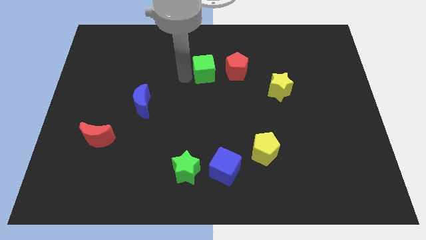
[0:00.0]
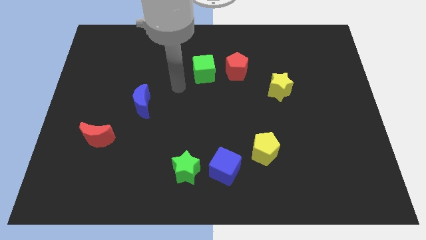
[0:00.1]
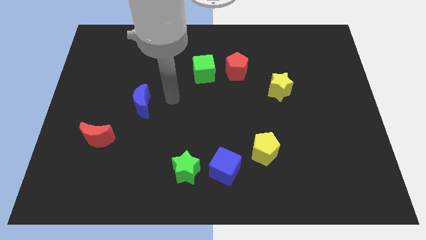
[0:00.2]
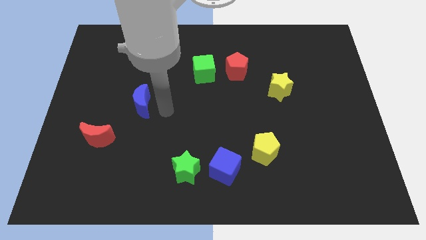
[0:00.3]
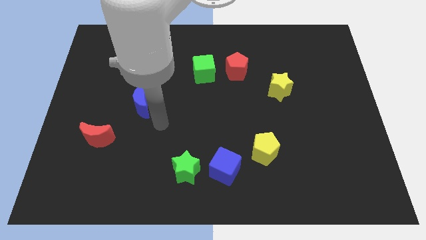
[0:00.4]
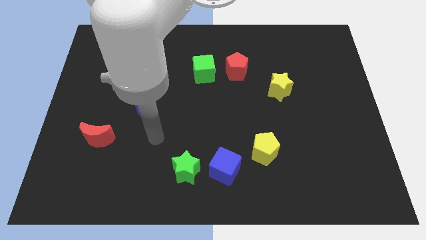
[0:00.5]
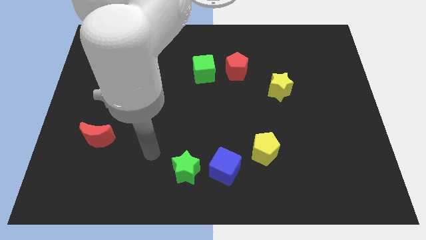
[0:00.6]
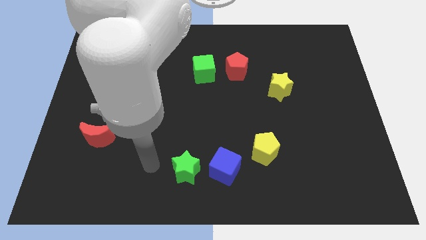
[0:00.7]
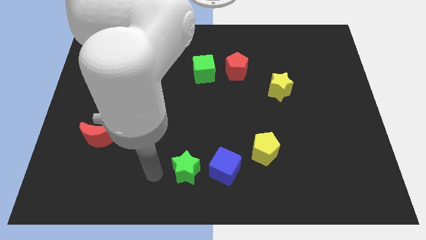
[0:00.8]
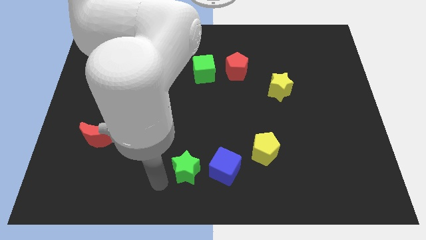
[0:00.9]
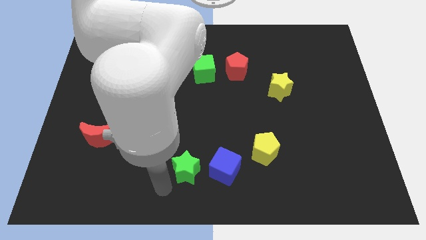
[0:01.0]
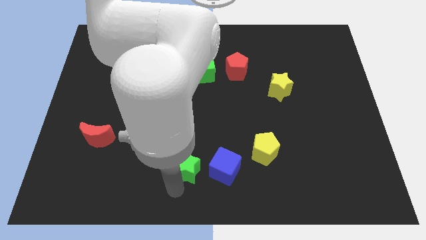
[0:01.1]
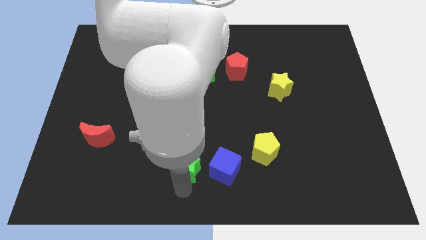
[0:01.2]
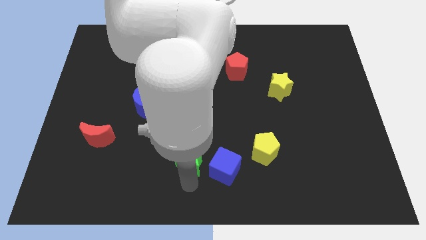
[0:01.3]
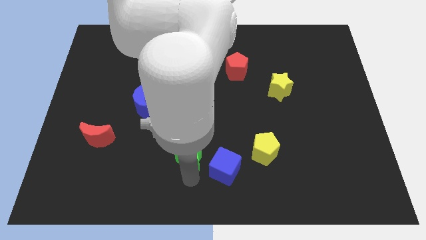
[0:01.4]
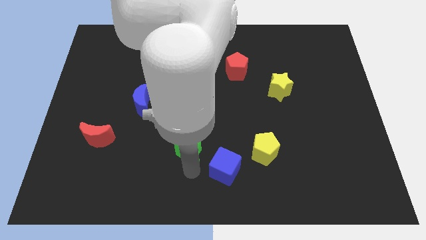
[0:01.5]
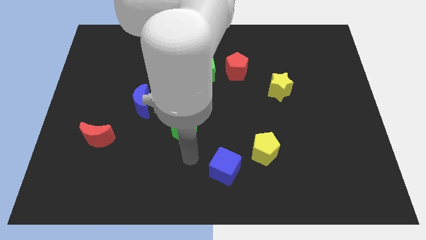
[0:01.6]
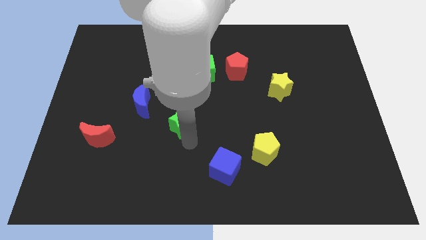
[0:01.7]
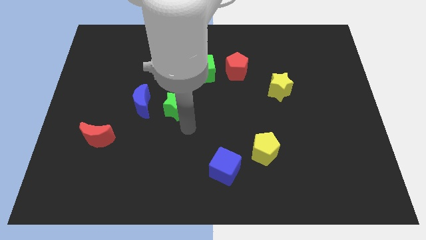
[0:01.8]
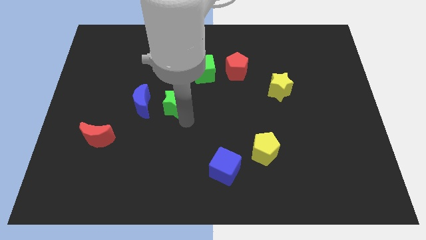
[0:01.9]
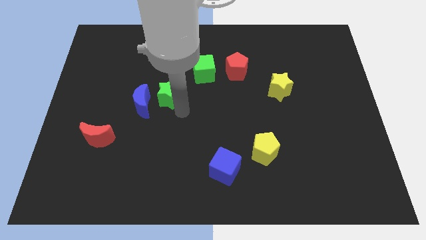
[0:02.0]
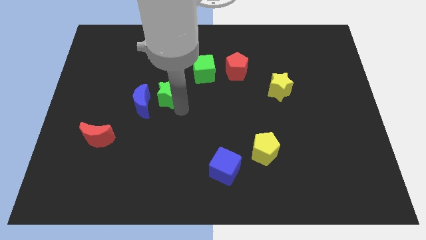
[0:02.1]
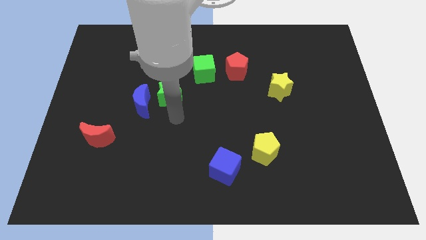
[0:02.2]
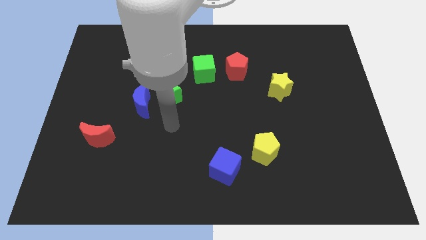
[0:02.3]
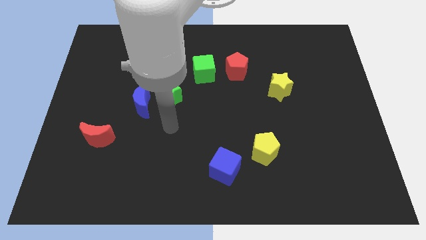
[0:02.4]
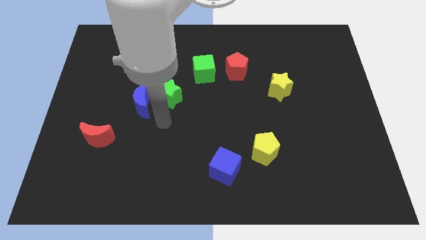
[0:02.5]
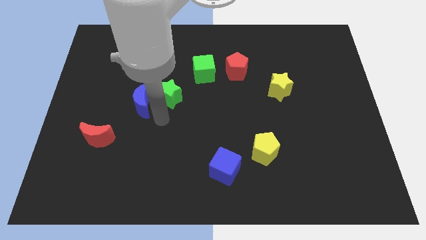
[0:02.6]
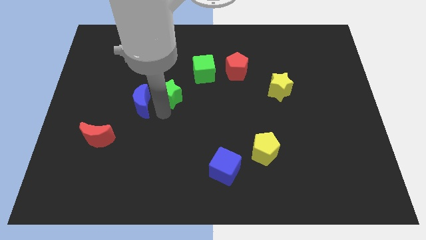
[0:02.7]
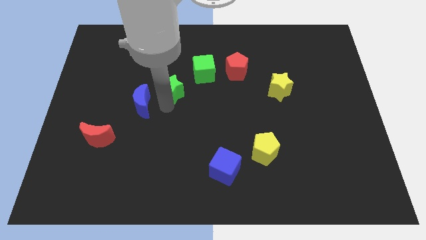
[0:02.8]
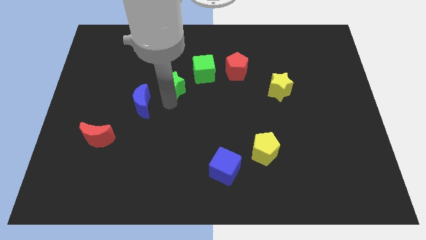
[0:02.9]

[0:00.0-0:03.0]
place green star to the top right of blue moon

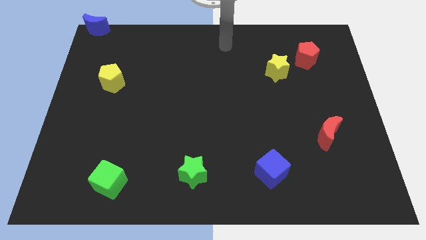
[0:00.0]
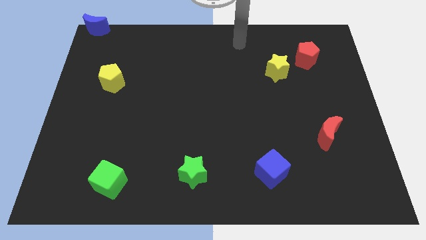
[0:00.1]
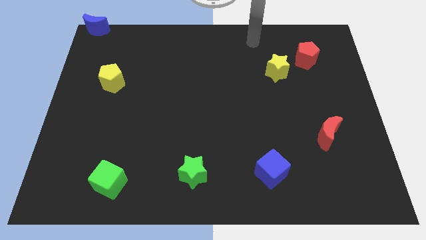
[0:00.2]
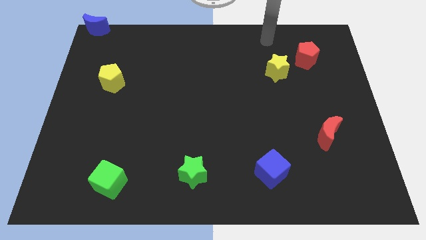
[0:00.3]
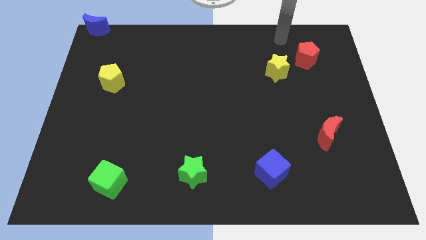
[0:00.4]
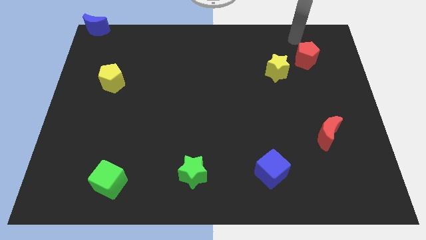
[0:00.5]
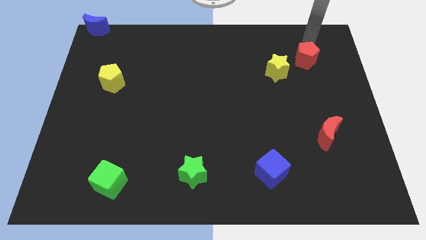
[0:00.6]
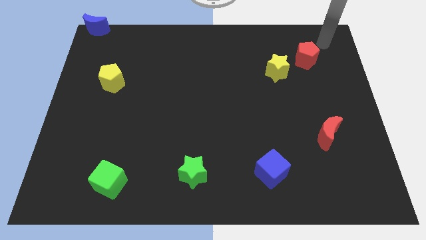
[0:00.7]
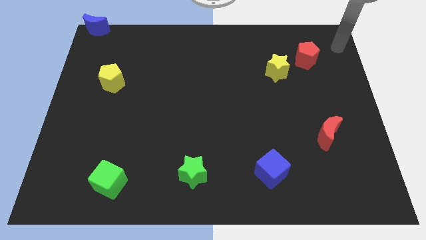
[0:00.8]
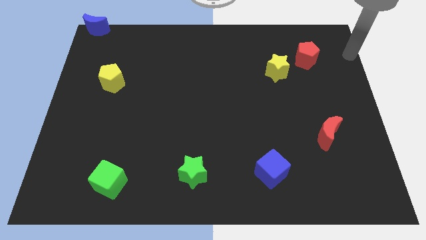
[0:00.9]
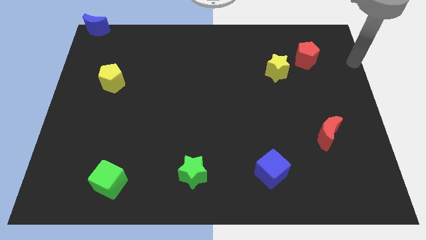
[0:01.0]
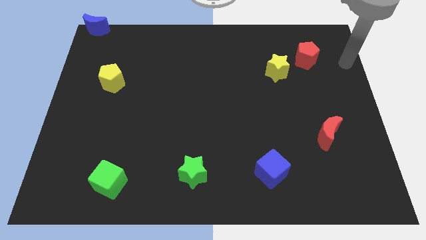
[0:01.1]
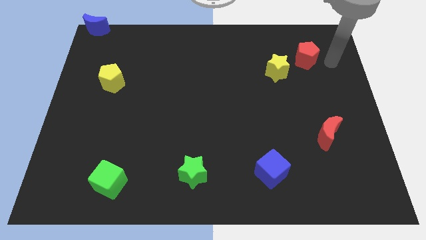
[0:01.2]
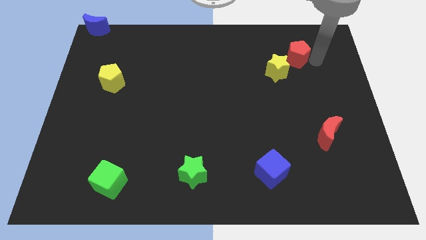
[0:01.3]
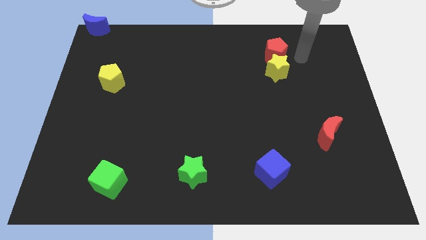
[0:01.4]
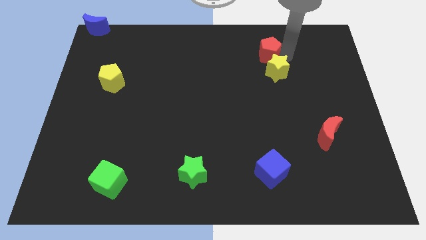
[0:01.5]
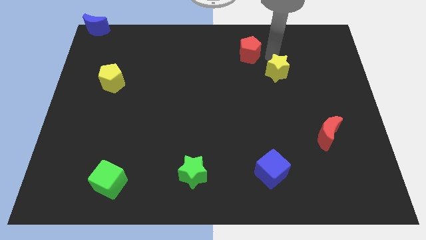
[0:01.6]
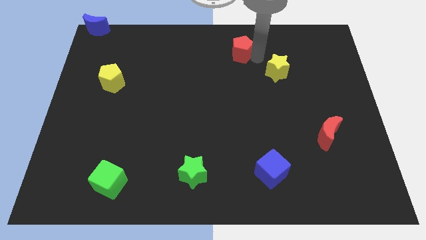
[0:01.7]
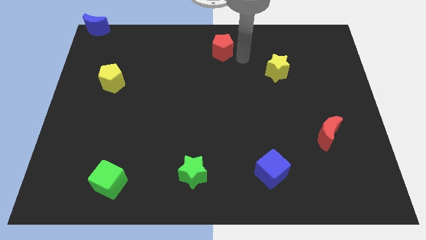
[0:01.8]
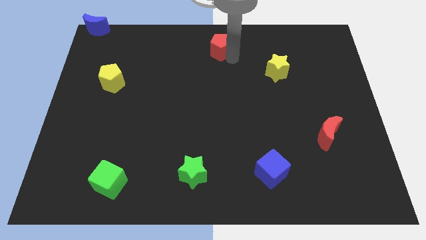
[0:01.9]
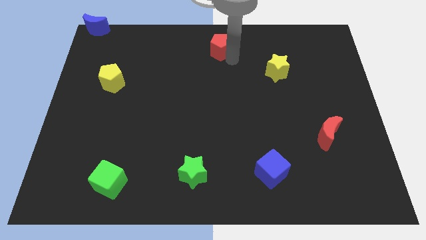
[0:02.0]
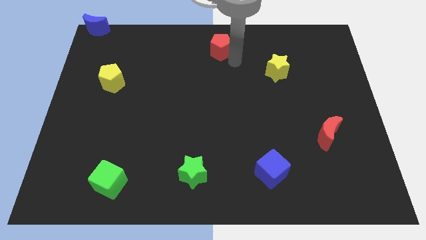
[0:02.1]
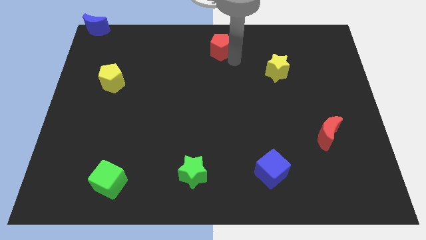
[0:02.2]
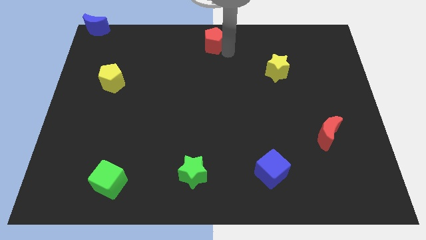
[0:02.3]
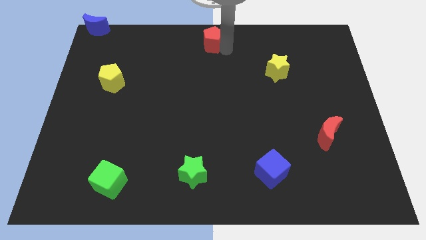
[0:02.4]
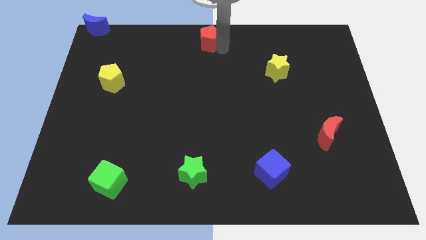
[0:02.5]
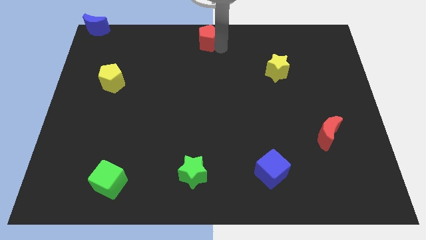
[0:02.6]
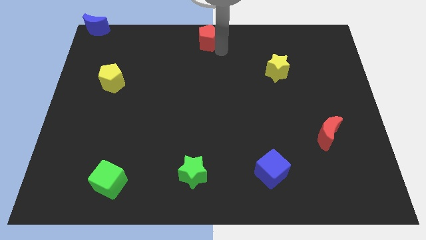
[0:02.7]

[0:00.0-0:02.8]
place red pentagon to the top center of the board

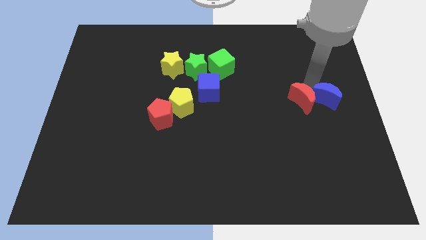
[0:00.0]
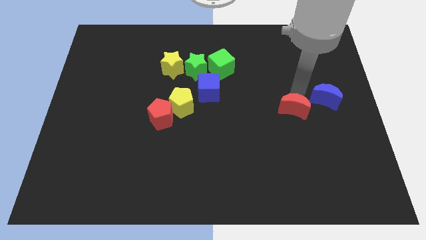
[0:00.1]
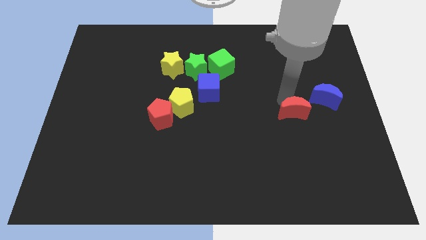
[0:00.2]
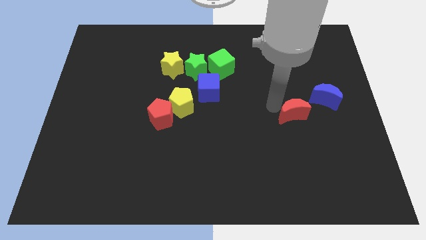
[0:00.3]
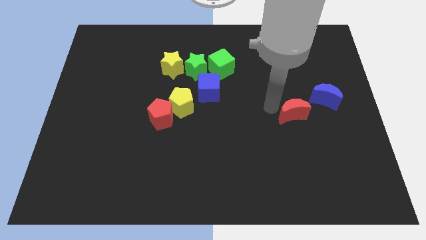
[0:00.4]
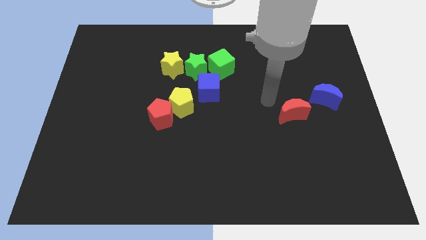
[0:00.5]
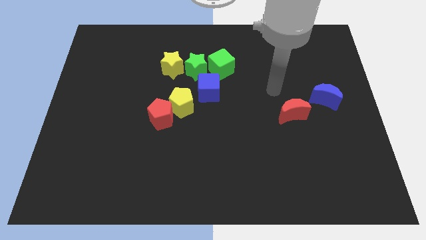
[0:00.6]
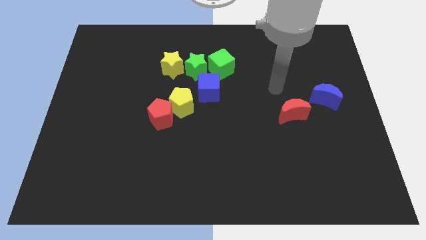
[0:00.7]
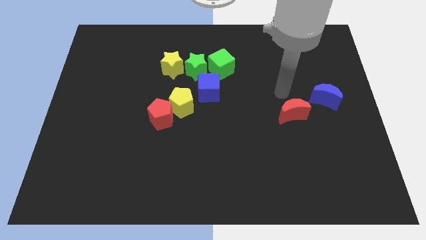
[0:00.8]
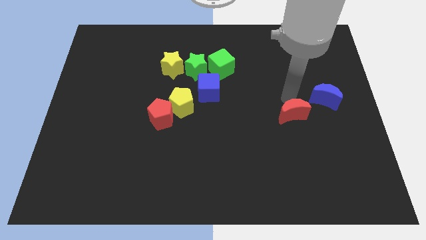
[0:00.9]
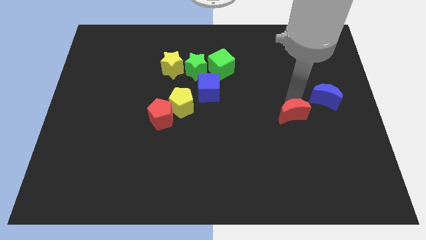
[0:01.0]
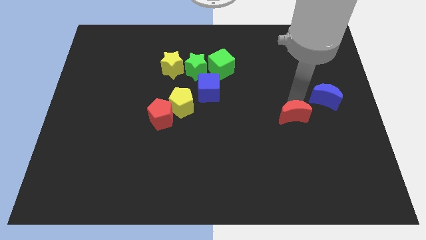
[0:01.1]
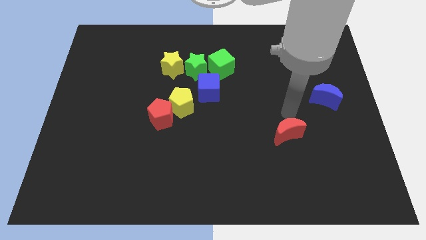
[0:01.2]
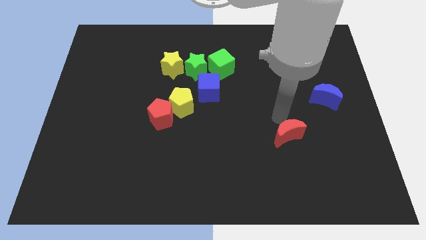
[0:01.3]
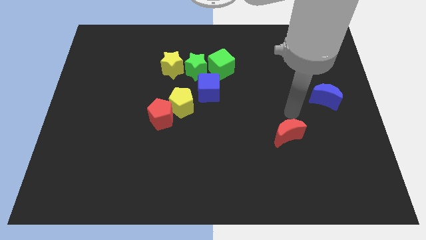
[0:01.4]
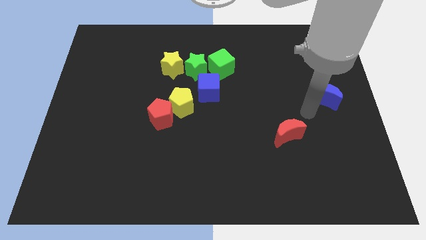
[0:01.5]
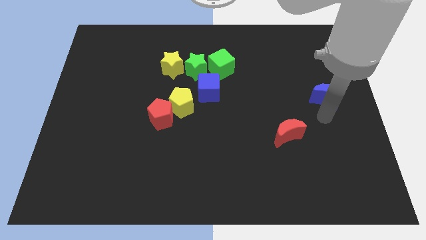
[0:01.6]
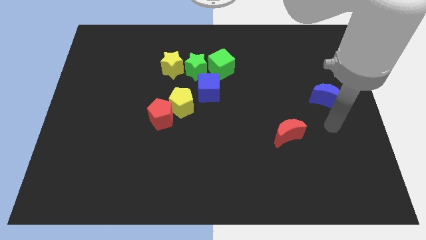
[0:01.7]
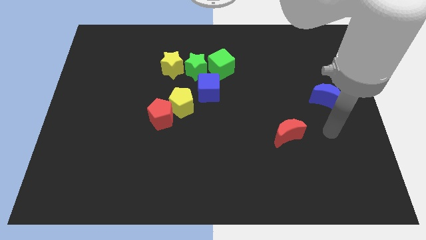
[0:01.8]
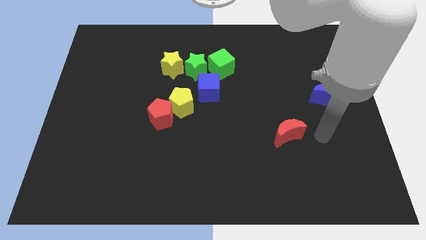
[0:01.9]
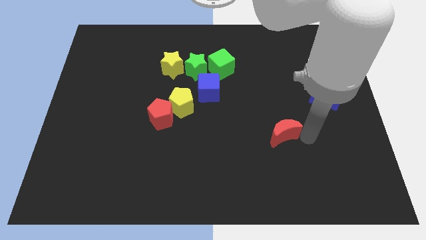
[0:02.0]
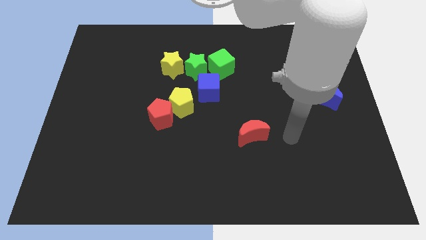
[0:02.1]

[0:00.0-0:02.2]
separate the red moon from the blue moon

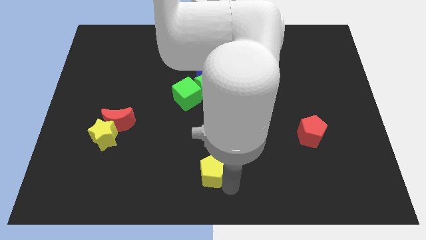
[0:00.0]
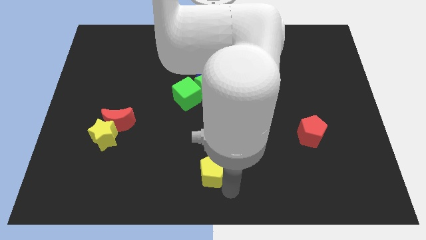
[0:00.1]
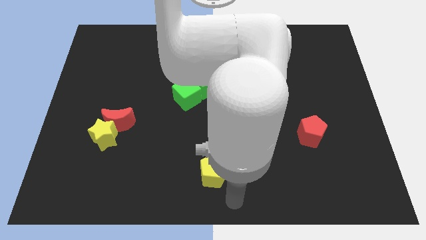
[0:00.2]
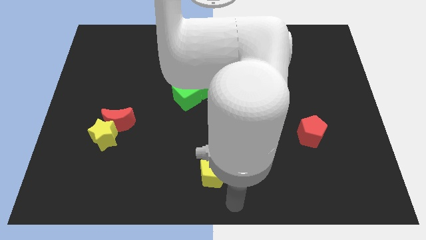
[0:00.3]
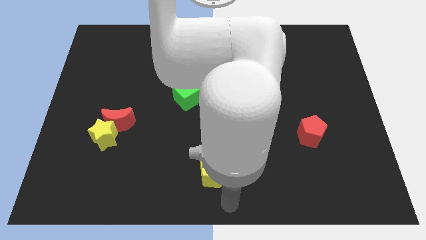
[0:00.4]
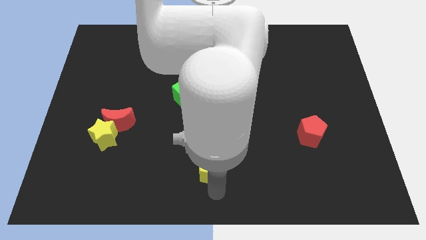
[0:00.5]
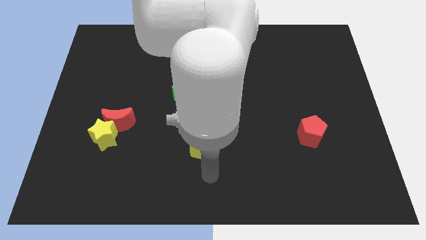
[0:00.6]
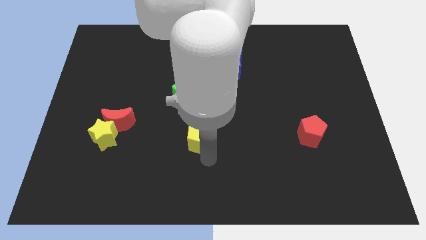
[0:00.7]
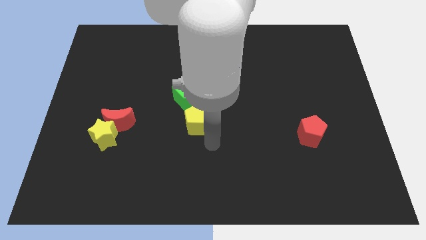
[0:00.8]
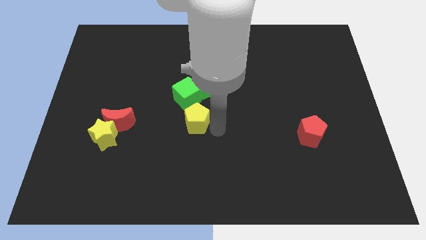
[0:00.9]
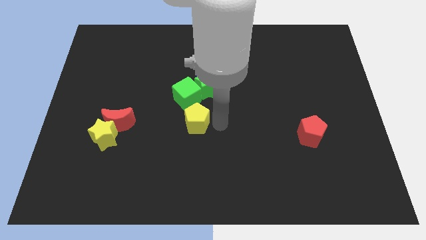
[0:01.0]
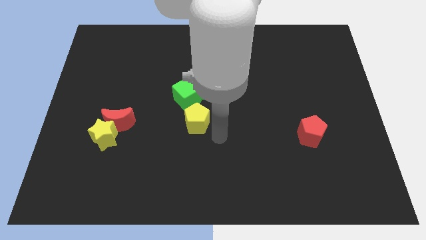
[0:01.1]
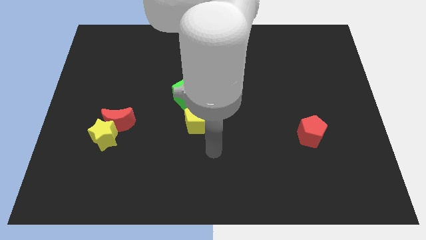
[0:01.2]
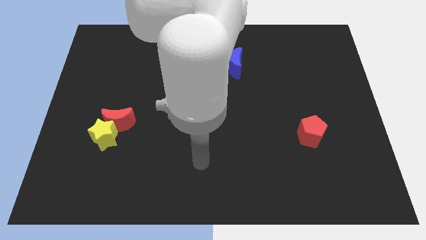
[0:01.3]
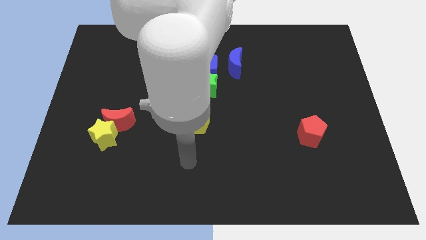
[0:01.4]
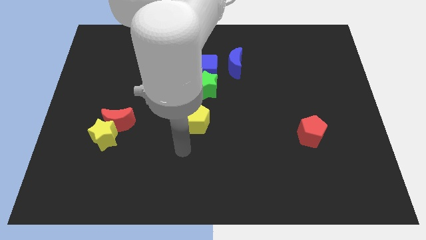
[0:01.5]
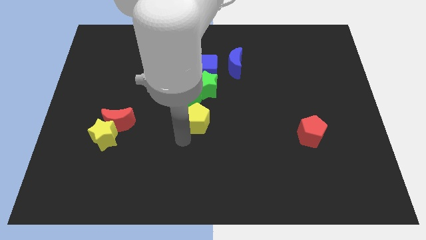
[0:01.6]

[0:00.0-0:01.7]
place the yellow pentagon under the green cube
